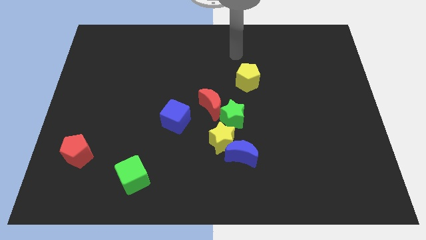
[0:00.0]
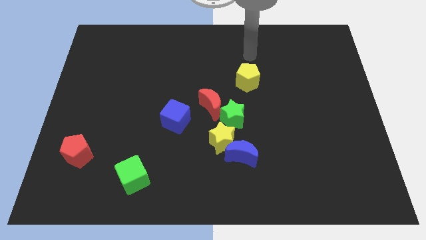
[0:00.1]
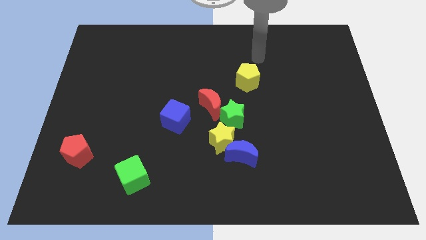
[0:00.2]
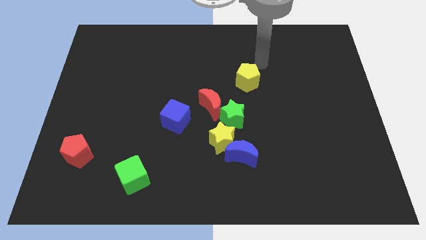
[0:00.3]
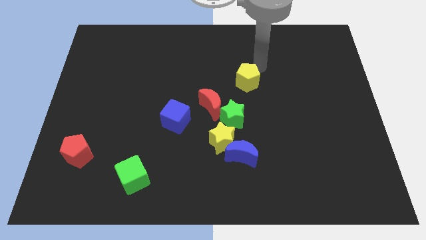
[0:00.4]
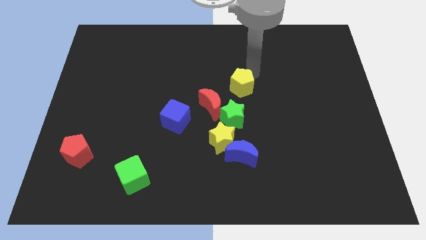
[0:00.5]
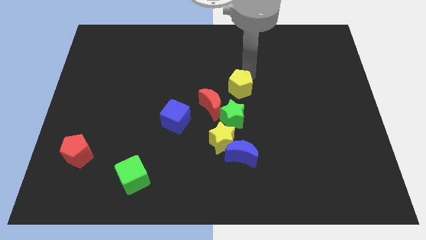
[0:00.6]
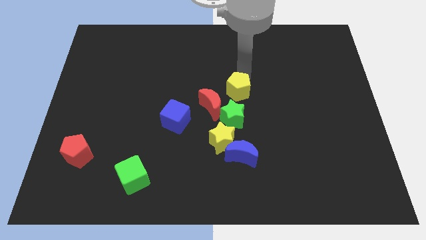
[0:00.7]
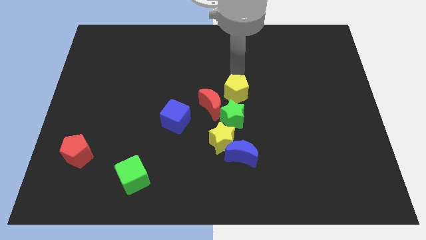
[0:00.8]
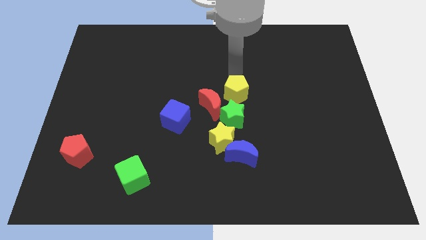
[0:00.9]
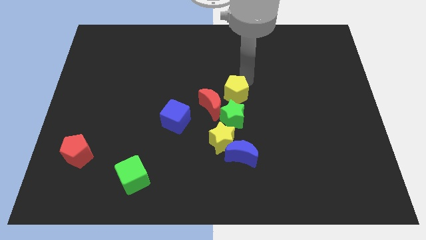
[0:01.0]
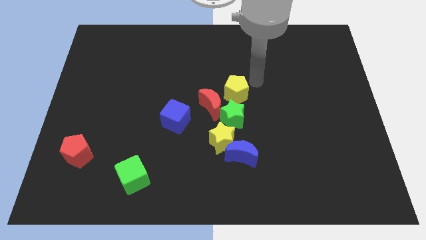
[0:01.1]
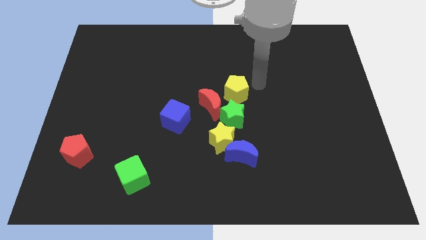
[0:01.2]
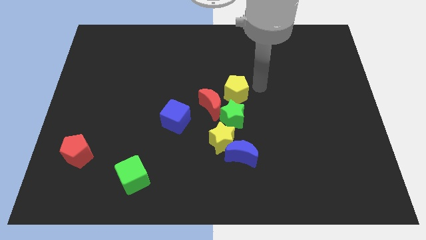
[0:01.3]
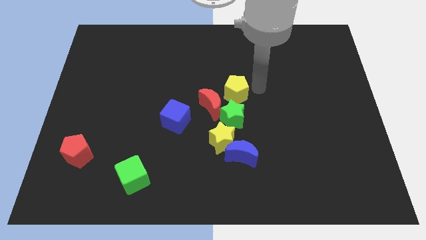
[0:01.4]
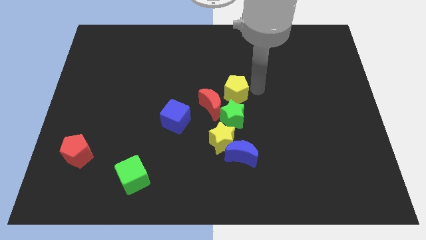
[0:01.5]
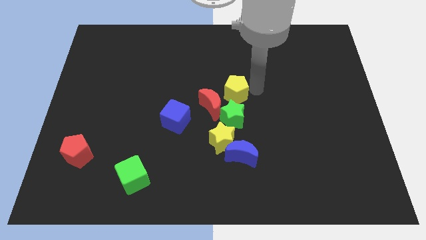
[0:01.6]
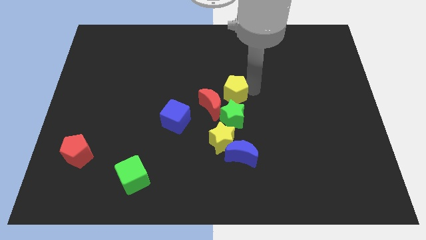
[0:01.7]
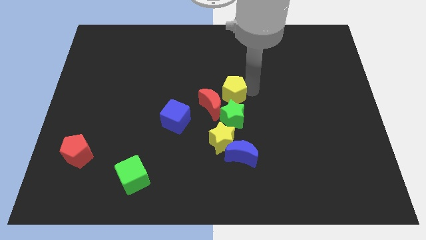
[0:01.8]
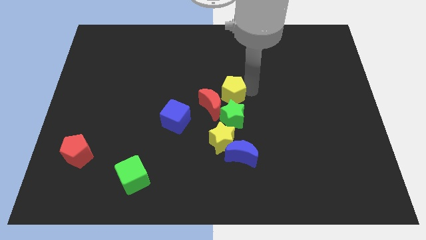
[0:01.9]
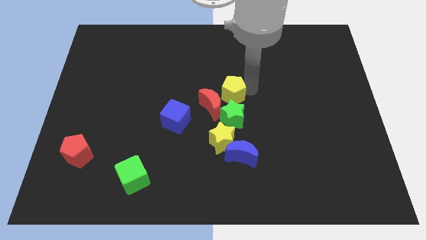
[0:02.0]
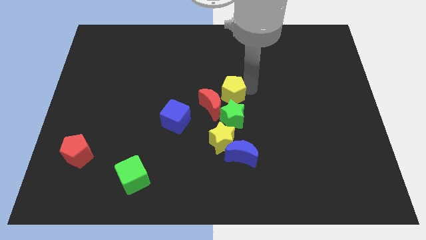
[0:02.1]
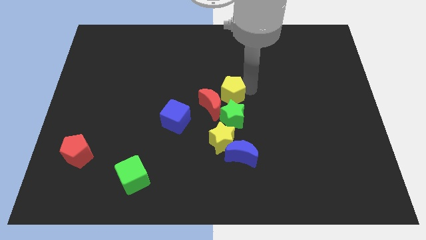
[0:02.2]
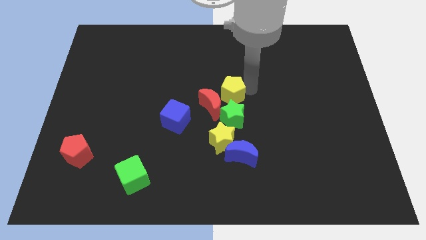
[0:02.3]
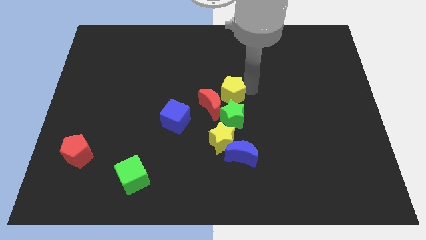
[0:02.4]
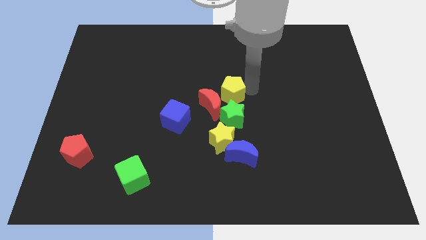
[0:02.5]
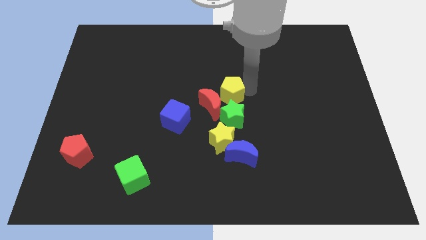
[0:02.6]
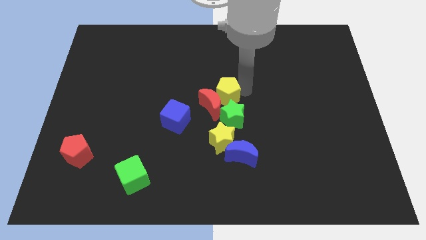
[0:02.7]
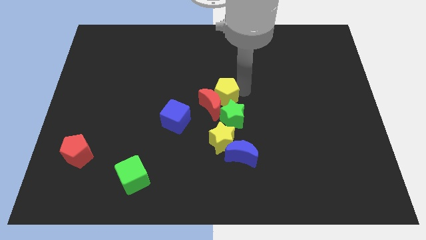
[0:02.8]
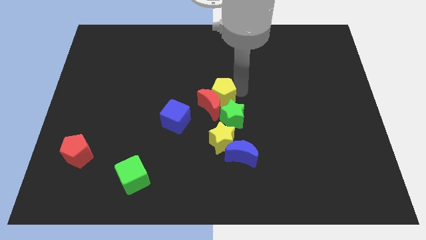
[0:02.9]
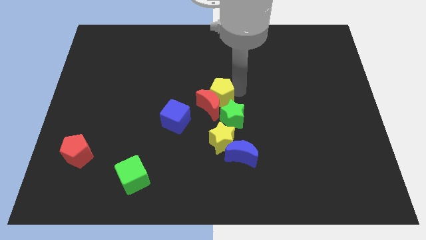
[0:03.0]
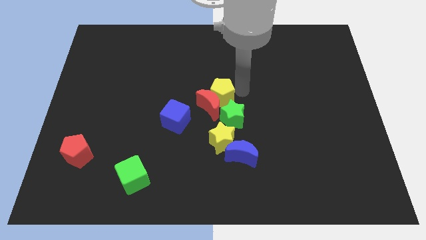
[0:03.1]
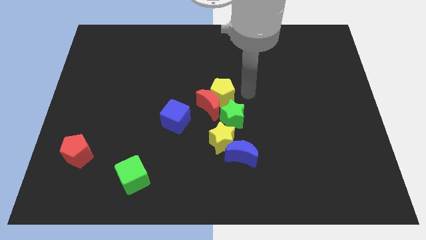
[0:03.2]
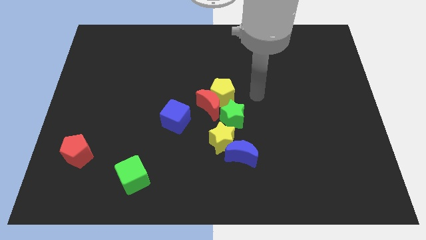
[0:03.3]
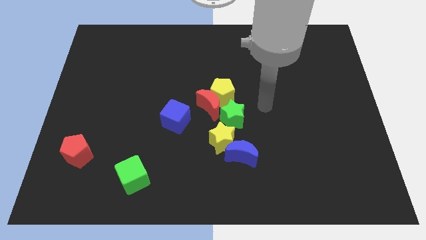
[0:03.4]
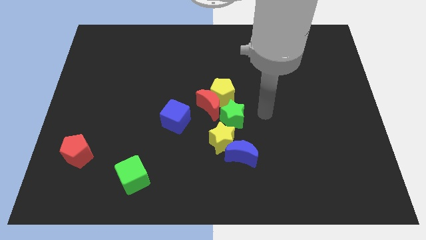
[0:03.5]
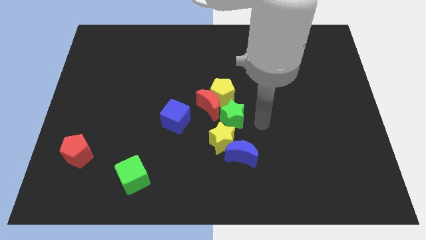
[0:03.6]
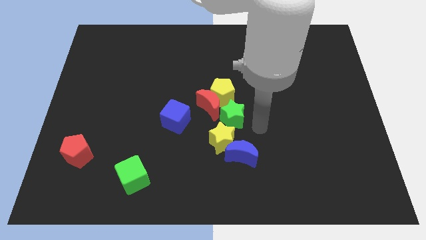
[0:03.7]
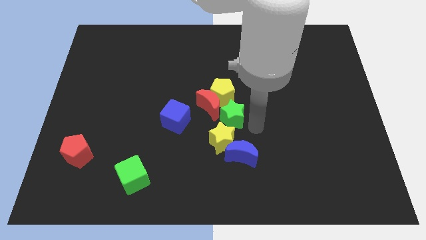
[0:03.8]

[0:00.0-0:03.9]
move yellow pentagon into red moon

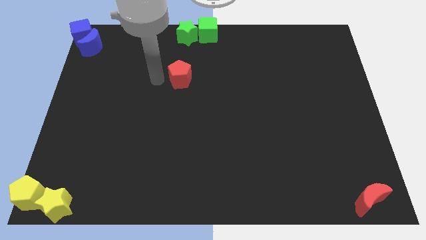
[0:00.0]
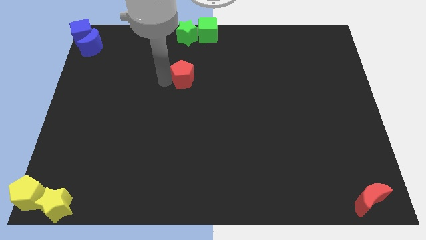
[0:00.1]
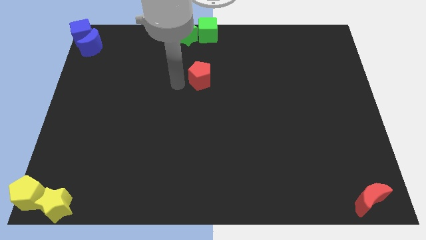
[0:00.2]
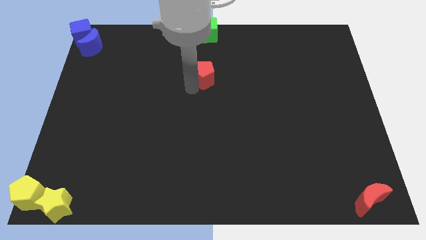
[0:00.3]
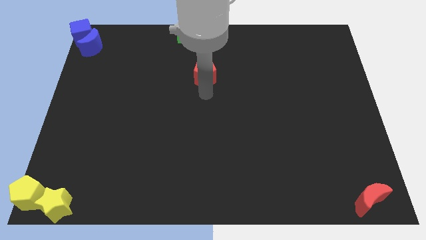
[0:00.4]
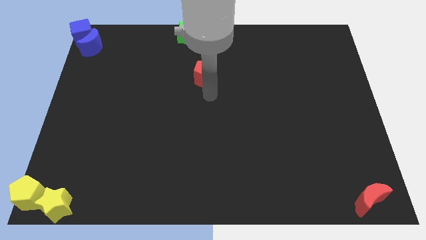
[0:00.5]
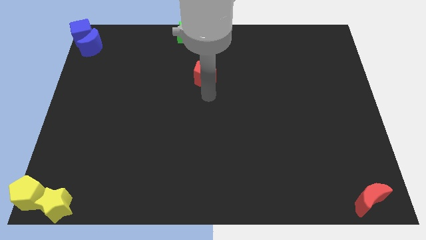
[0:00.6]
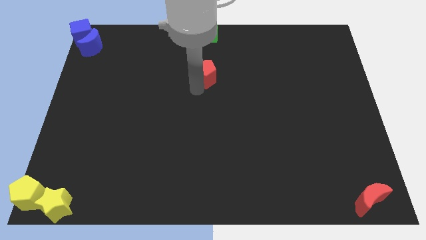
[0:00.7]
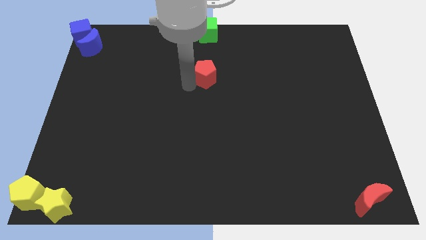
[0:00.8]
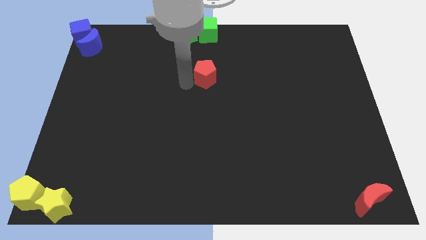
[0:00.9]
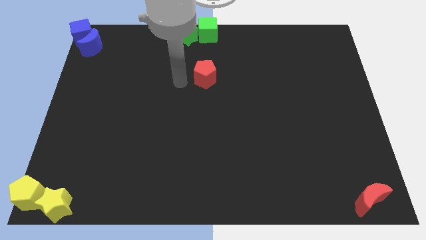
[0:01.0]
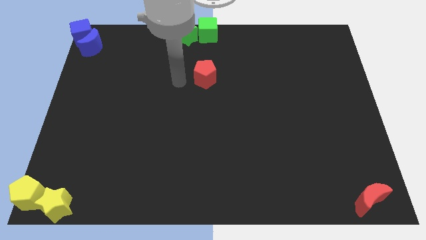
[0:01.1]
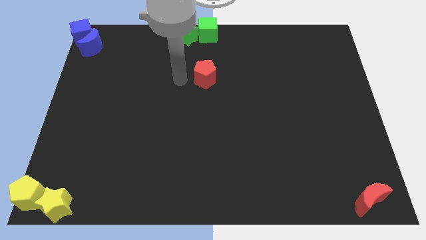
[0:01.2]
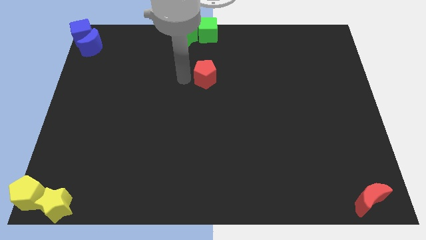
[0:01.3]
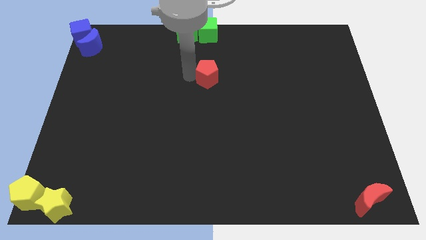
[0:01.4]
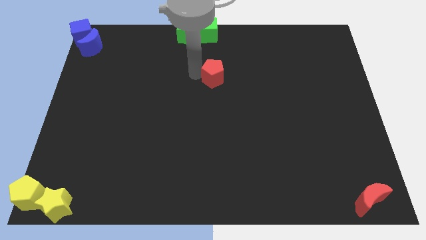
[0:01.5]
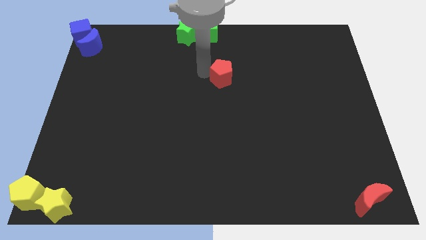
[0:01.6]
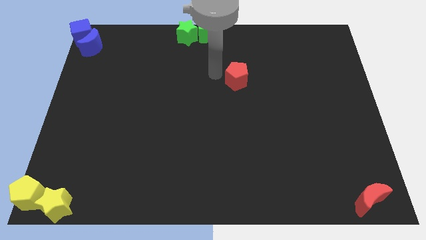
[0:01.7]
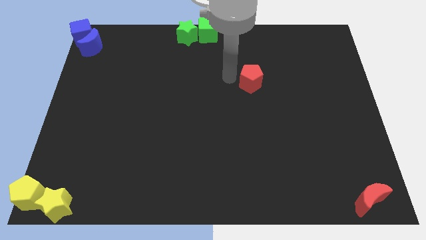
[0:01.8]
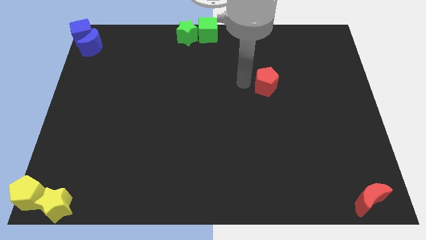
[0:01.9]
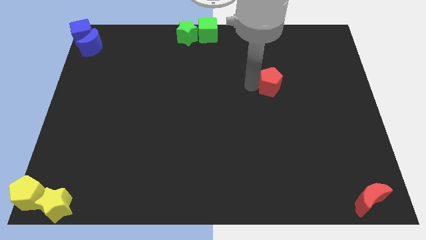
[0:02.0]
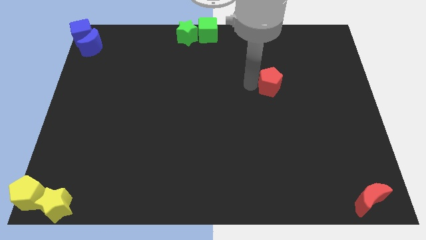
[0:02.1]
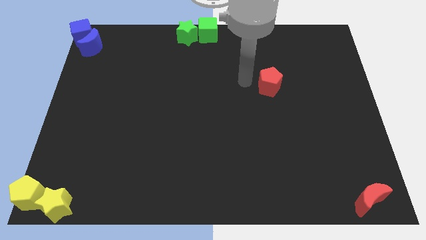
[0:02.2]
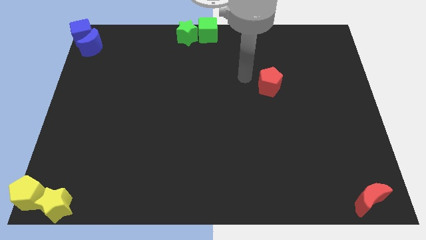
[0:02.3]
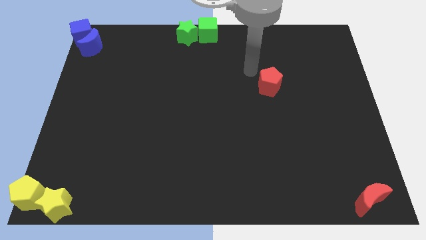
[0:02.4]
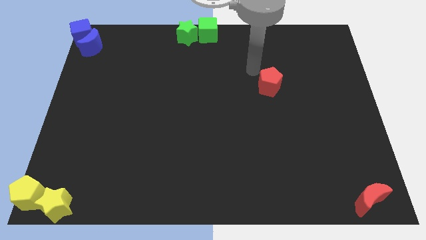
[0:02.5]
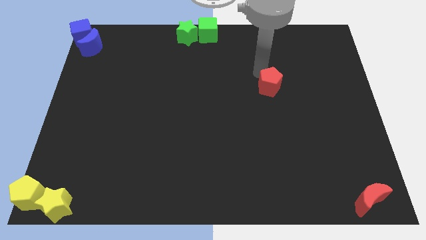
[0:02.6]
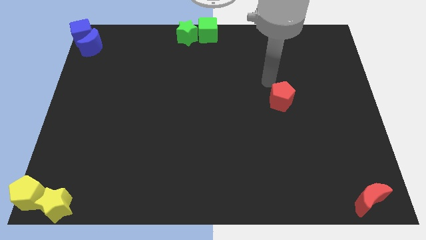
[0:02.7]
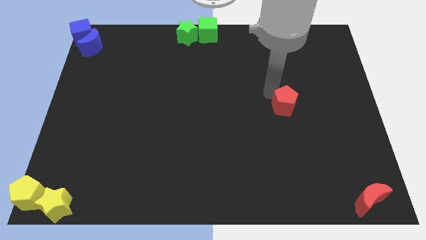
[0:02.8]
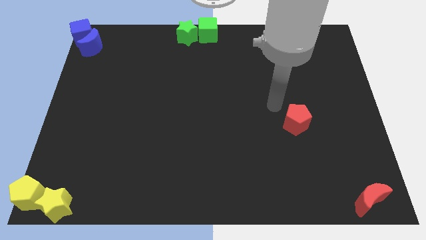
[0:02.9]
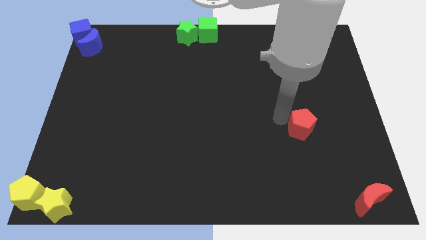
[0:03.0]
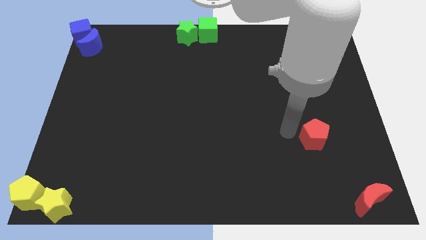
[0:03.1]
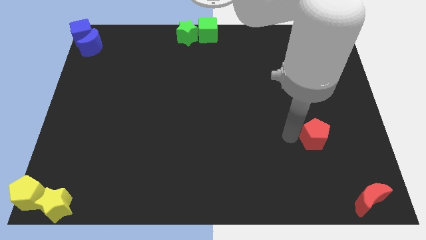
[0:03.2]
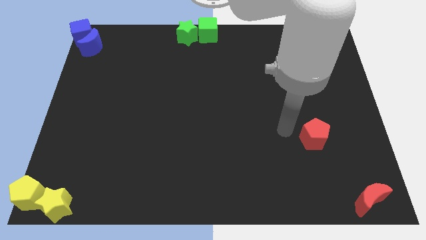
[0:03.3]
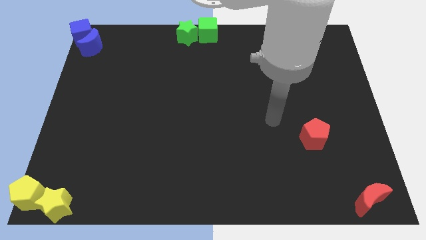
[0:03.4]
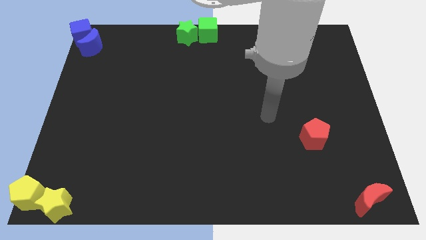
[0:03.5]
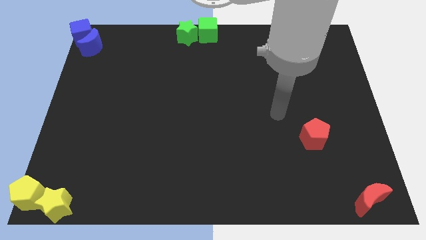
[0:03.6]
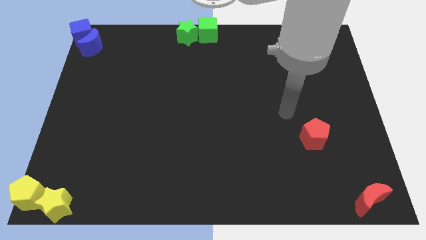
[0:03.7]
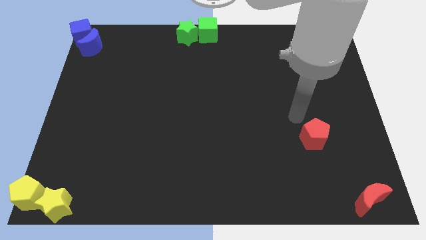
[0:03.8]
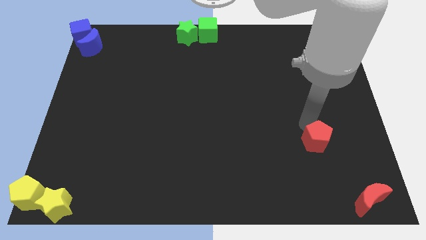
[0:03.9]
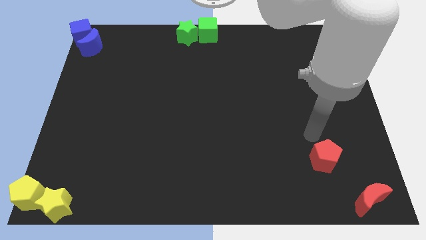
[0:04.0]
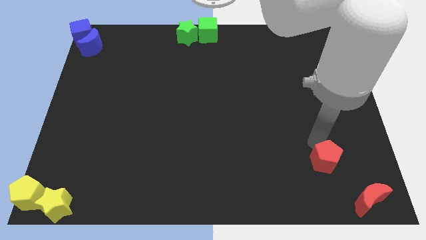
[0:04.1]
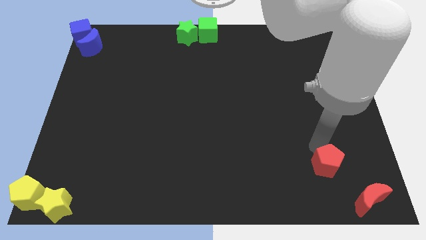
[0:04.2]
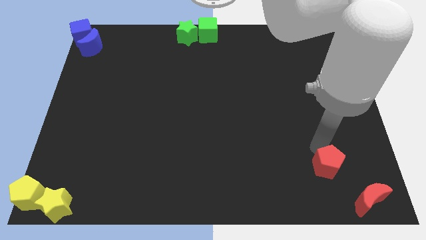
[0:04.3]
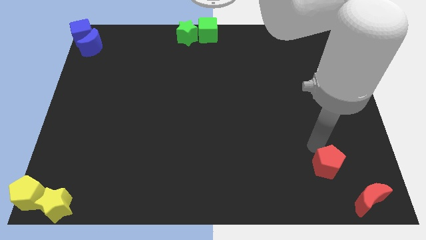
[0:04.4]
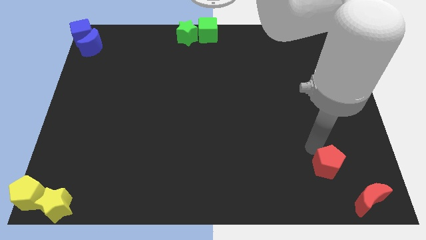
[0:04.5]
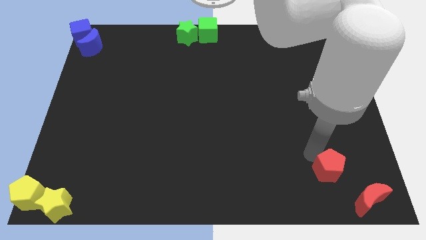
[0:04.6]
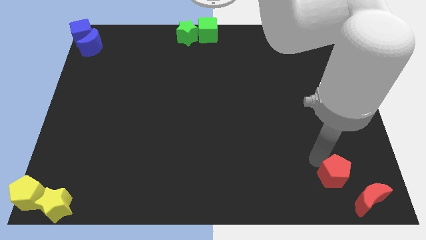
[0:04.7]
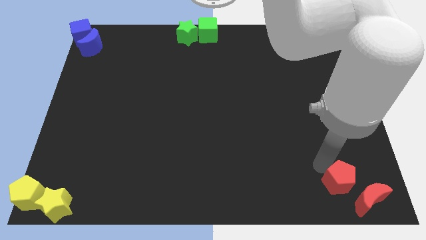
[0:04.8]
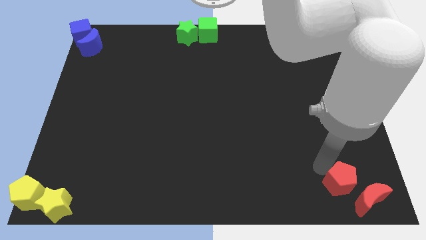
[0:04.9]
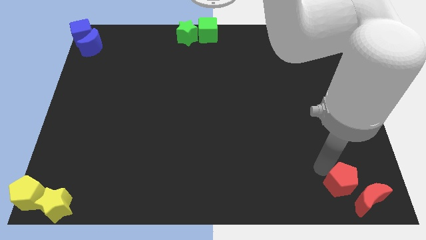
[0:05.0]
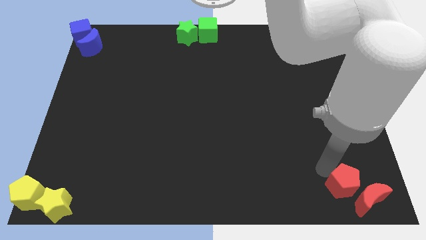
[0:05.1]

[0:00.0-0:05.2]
move the red pentagon to the top of the red crescent
